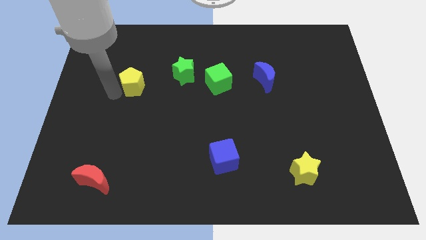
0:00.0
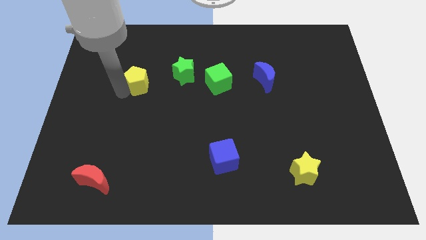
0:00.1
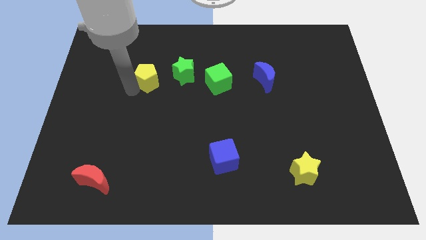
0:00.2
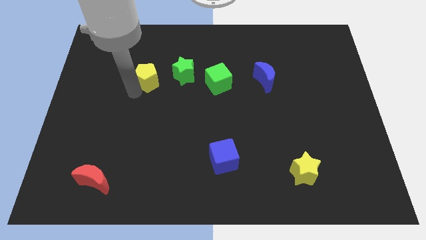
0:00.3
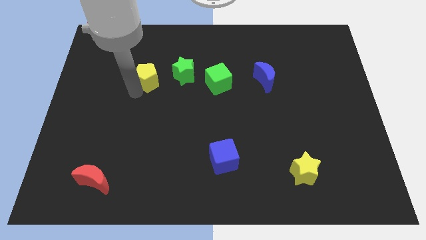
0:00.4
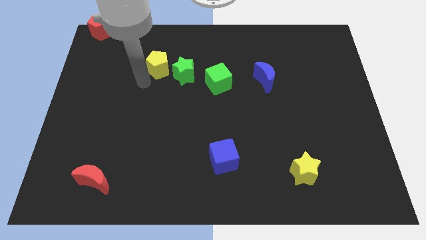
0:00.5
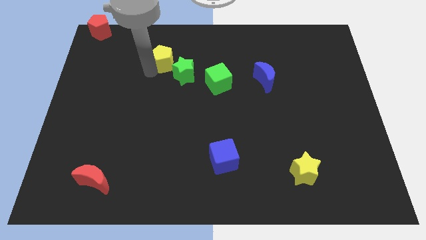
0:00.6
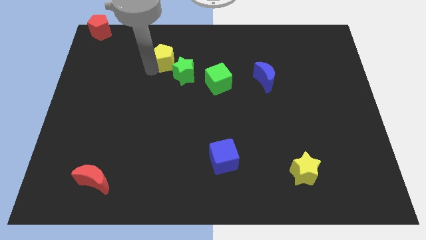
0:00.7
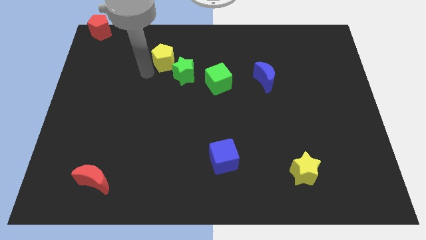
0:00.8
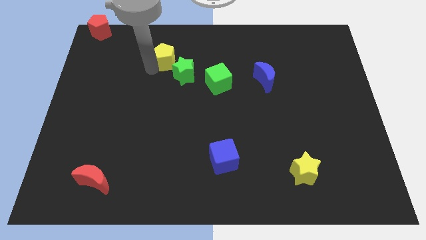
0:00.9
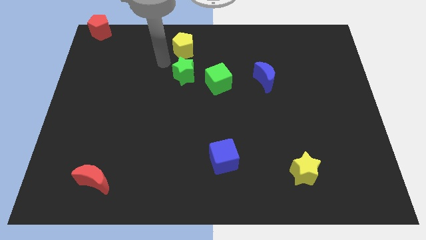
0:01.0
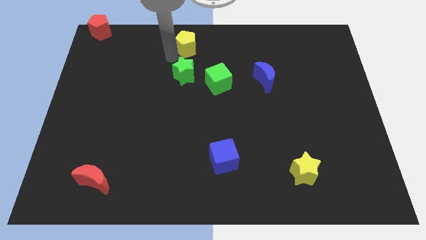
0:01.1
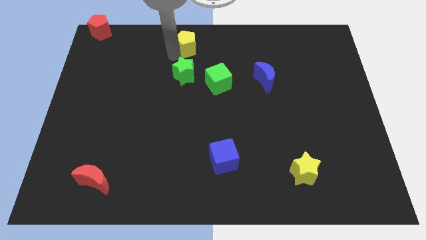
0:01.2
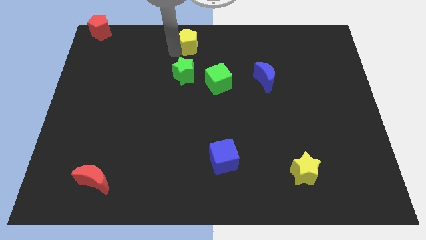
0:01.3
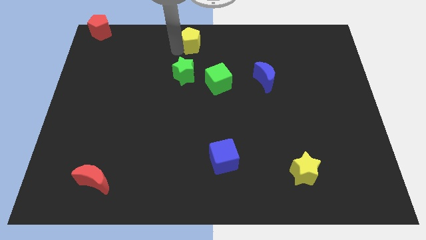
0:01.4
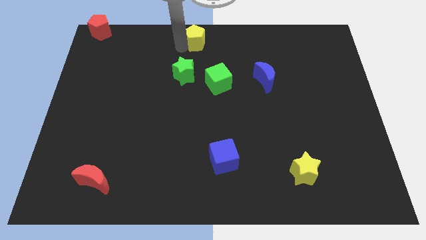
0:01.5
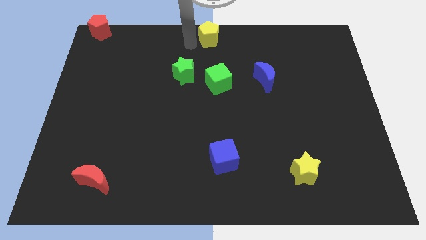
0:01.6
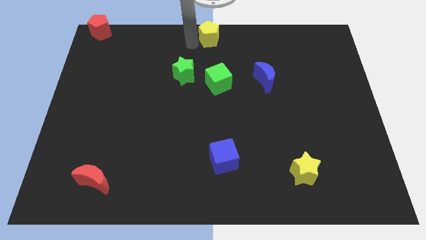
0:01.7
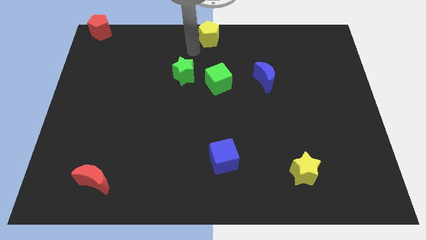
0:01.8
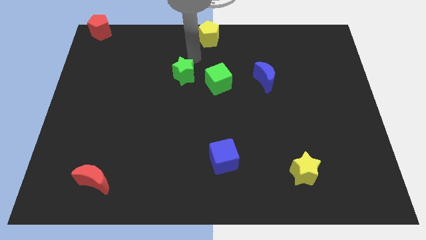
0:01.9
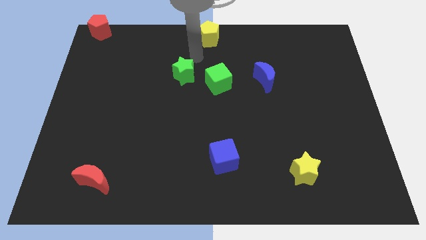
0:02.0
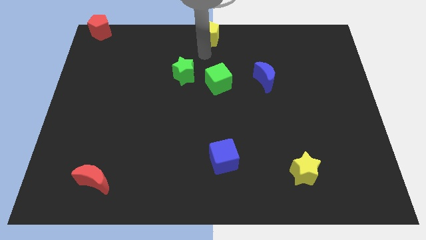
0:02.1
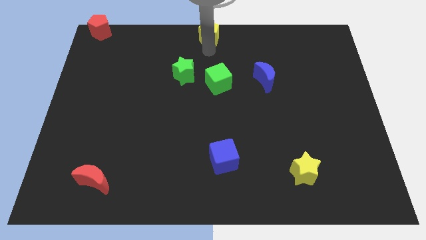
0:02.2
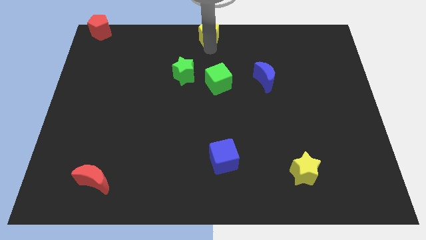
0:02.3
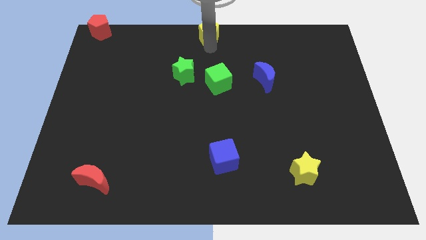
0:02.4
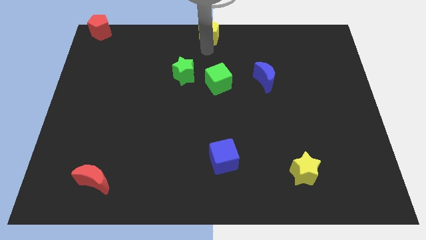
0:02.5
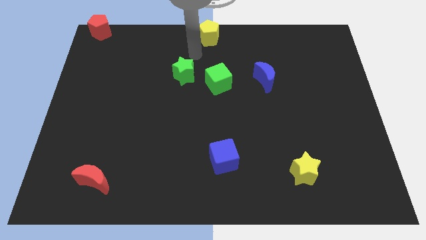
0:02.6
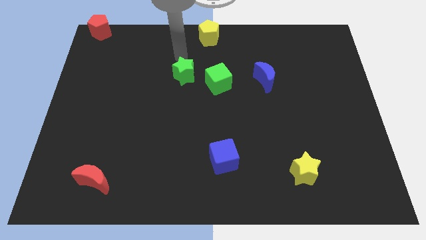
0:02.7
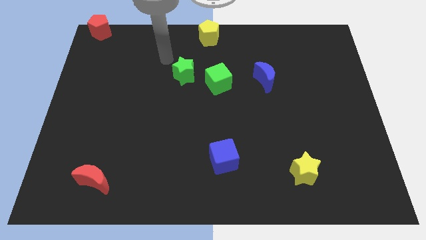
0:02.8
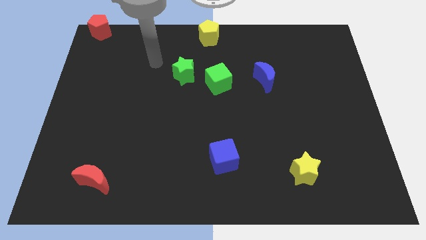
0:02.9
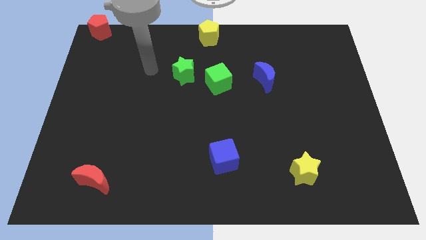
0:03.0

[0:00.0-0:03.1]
place the yellow pentagon to the top center of the board

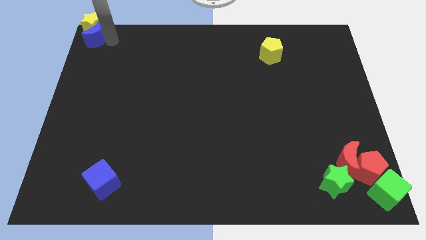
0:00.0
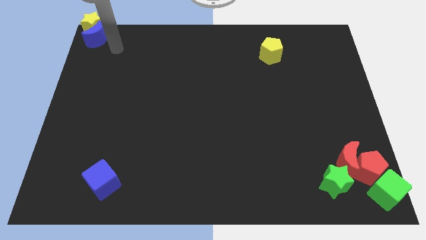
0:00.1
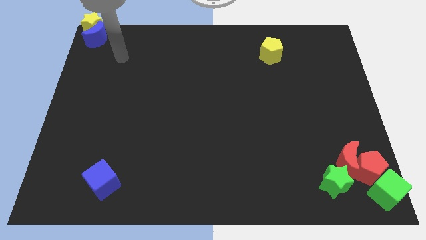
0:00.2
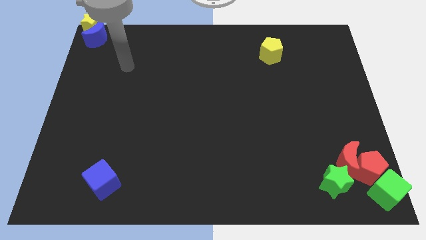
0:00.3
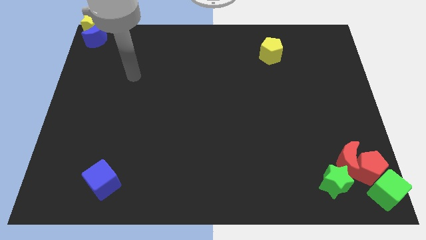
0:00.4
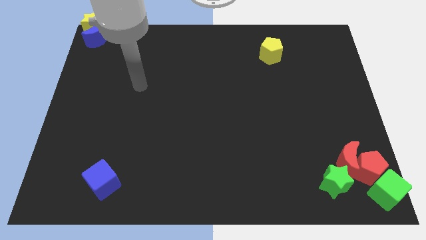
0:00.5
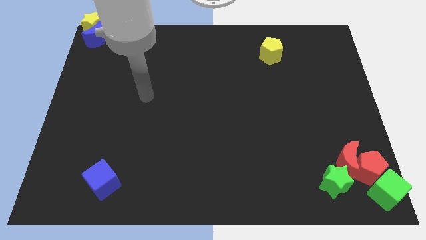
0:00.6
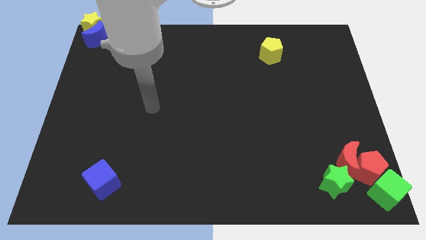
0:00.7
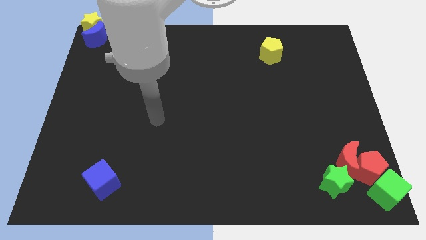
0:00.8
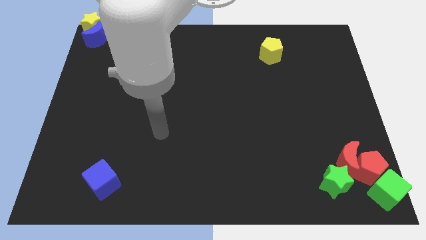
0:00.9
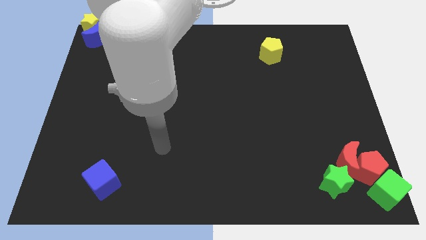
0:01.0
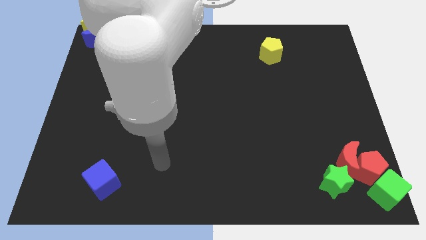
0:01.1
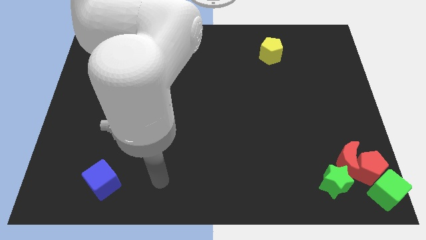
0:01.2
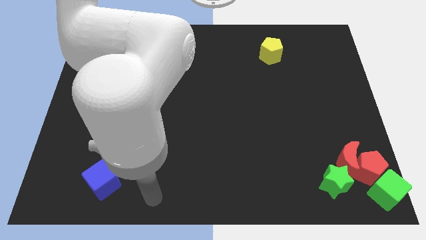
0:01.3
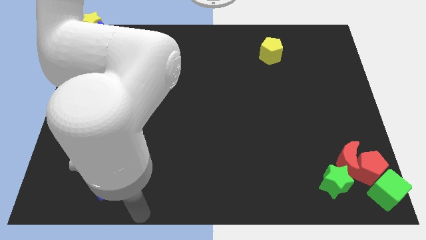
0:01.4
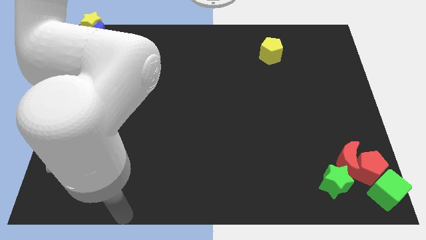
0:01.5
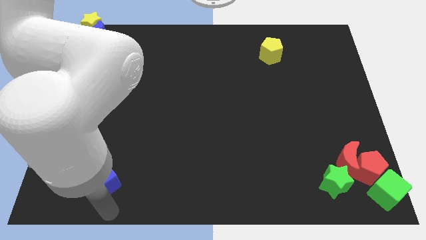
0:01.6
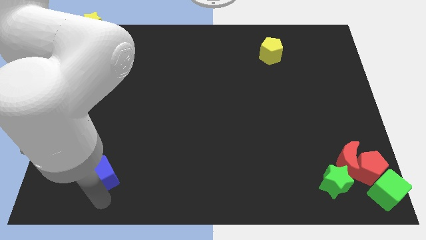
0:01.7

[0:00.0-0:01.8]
move your arm towards the blue cube

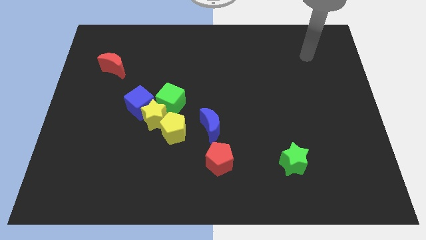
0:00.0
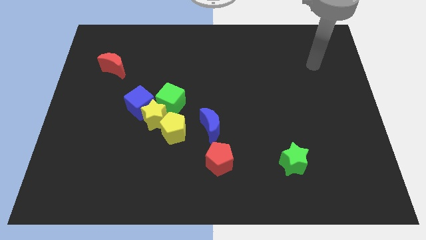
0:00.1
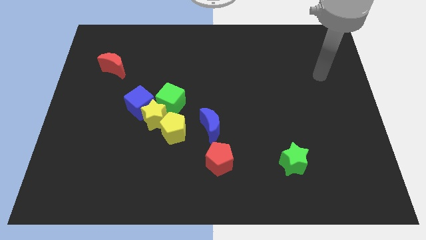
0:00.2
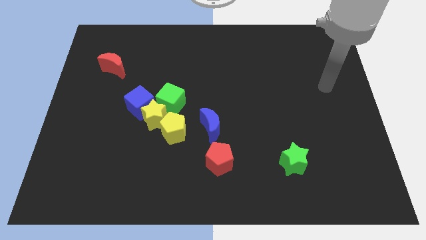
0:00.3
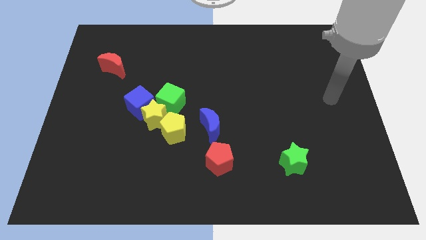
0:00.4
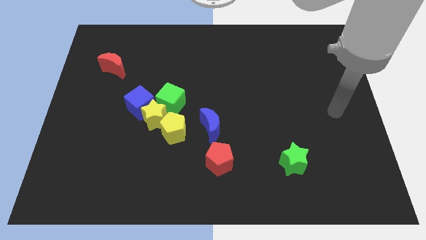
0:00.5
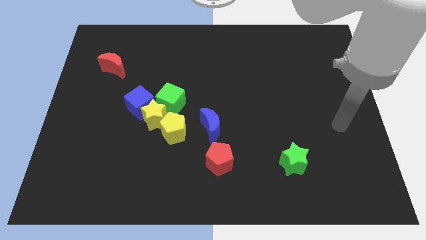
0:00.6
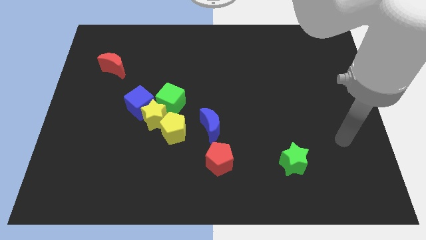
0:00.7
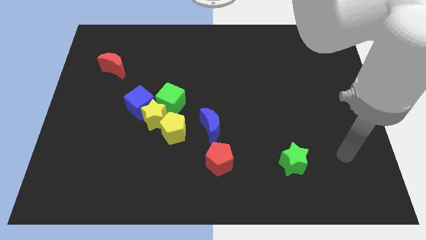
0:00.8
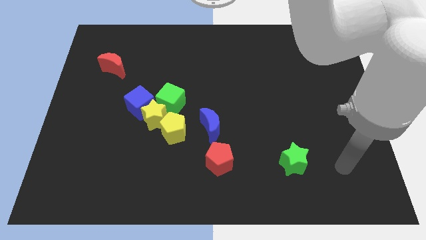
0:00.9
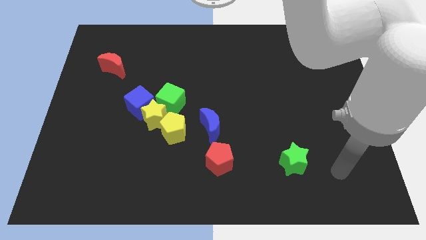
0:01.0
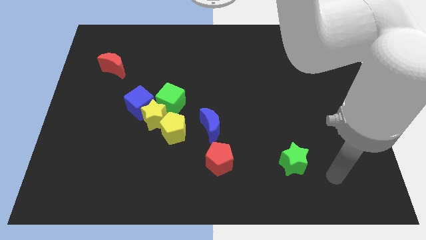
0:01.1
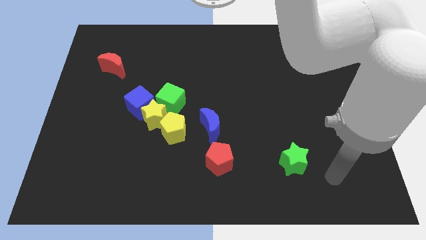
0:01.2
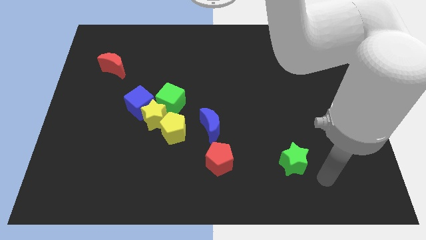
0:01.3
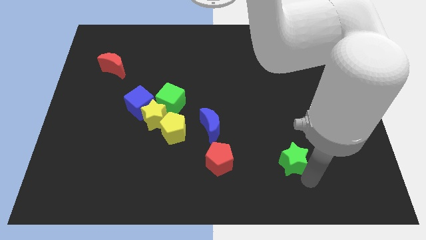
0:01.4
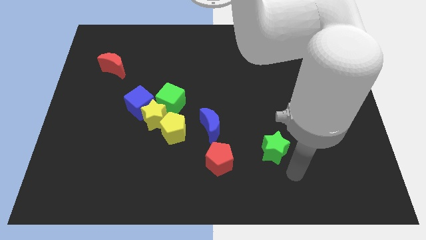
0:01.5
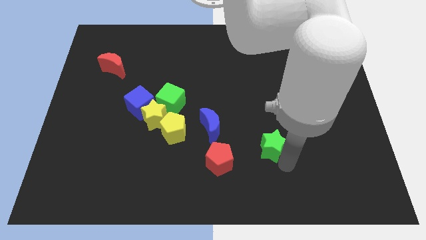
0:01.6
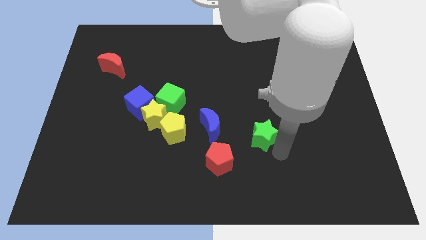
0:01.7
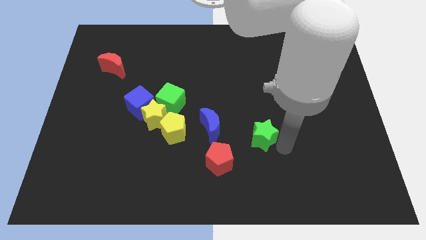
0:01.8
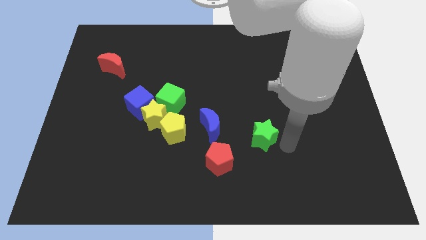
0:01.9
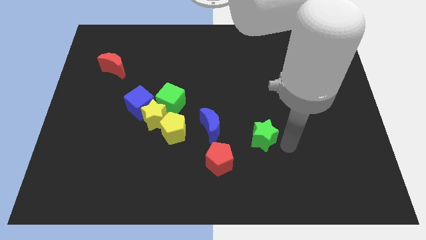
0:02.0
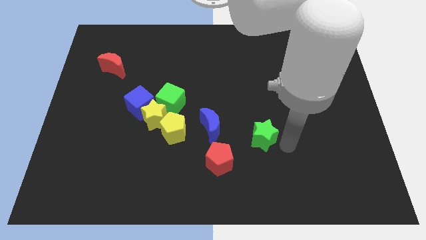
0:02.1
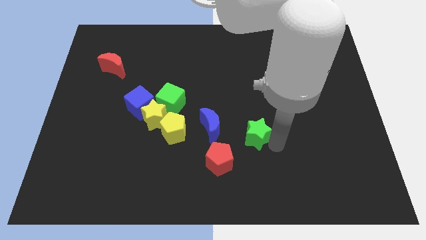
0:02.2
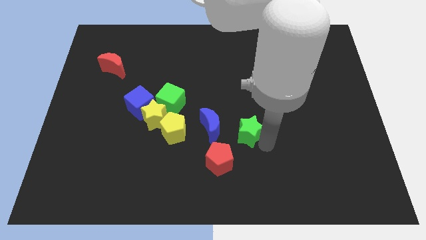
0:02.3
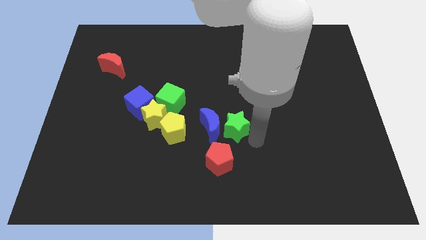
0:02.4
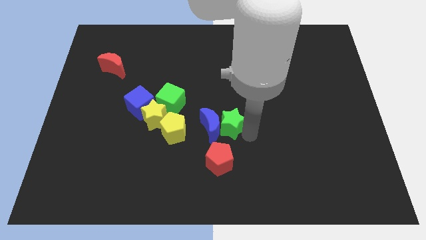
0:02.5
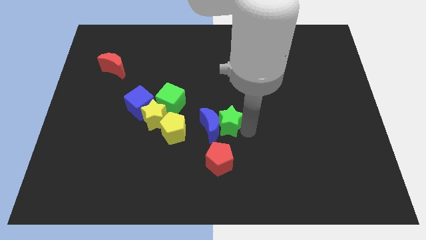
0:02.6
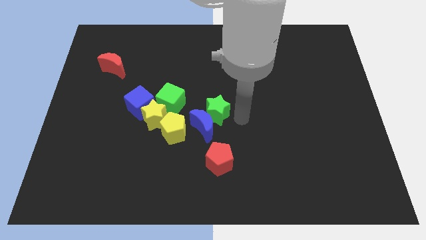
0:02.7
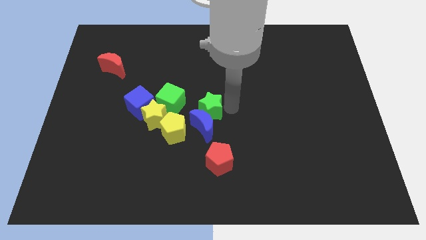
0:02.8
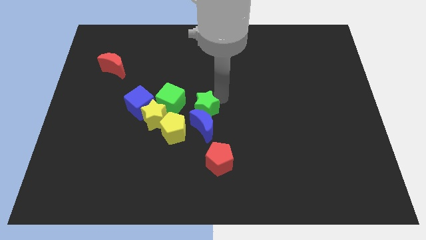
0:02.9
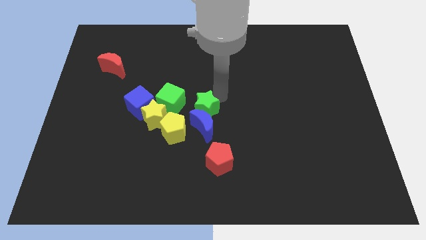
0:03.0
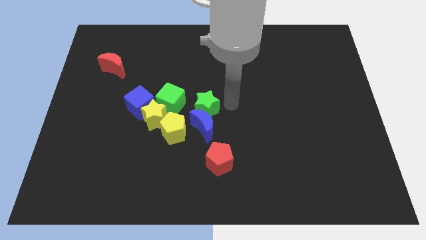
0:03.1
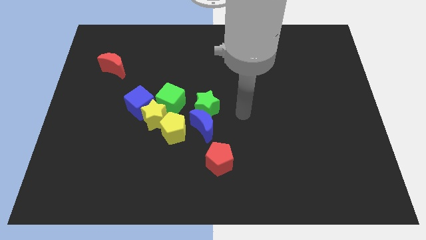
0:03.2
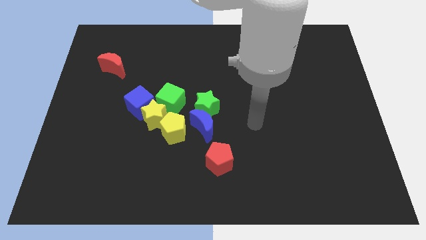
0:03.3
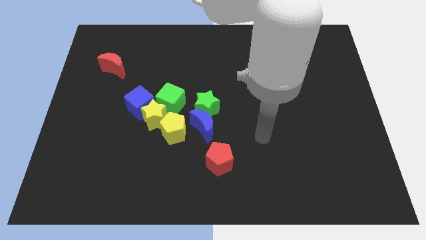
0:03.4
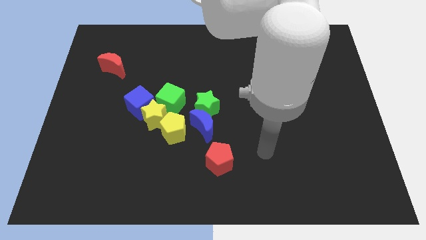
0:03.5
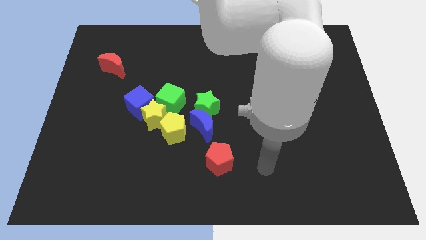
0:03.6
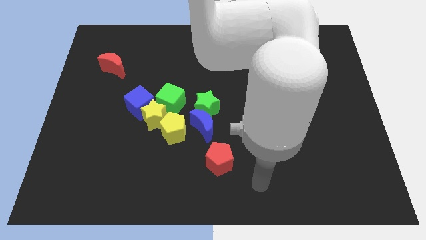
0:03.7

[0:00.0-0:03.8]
move the green star to the top side of the blue crescent

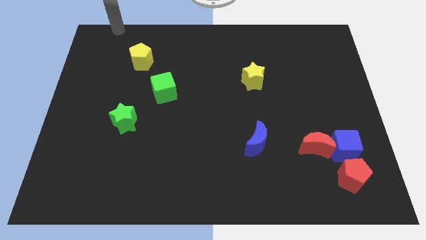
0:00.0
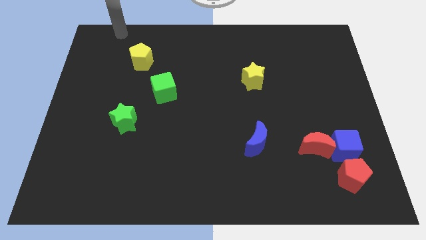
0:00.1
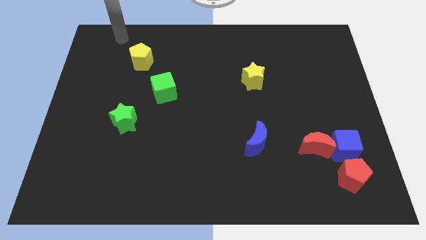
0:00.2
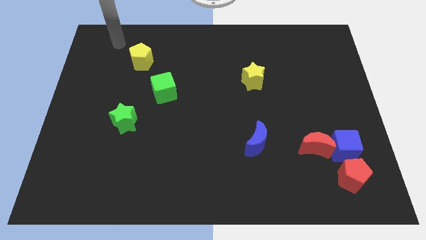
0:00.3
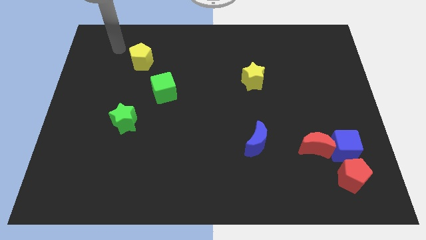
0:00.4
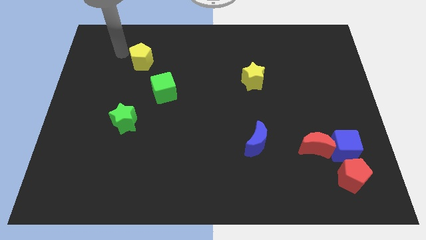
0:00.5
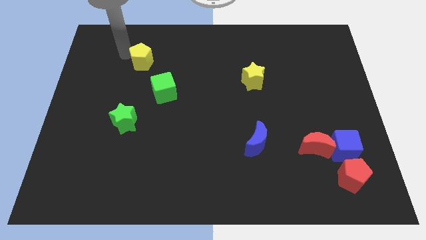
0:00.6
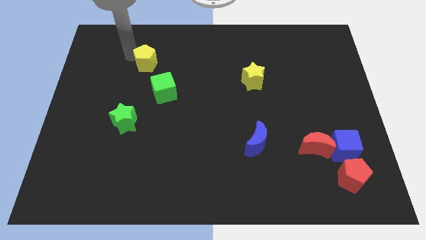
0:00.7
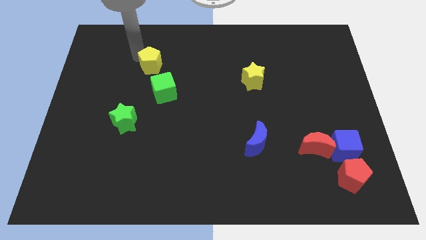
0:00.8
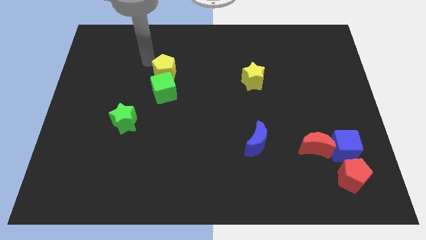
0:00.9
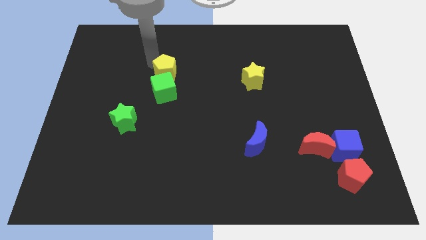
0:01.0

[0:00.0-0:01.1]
move the yellow pentagon above the green cube
